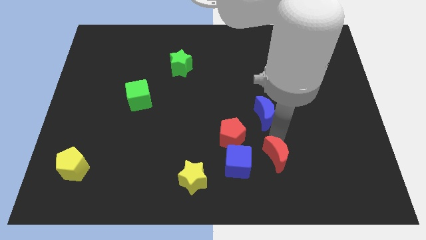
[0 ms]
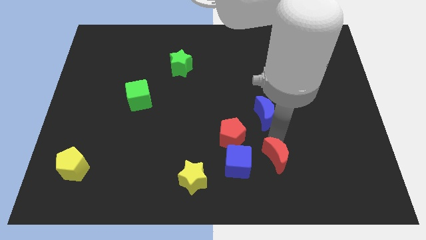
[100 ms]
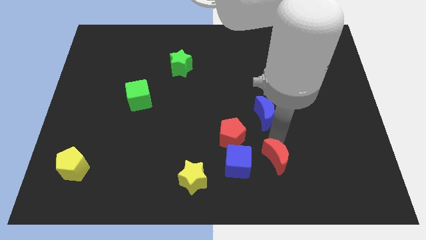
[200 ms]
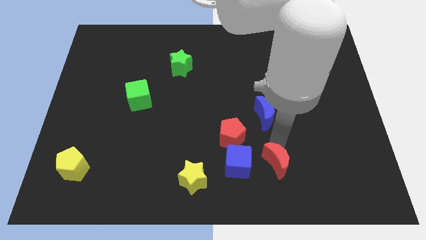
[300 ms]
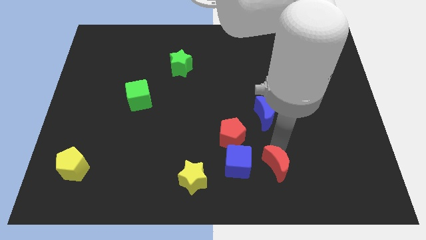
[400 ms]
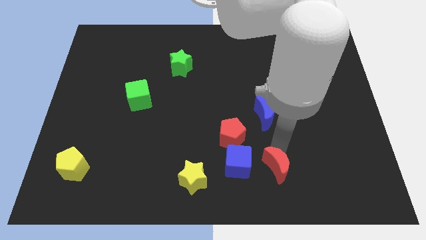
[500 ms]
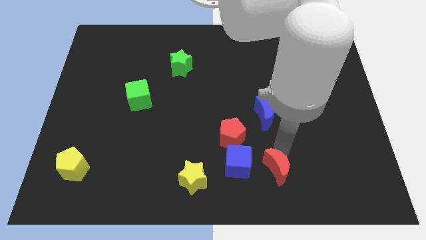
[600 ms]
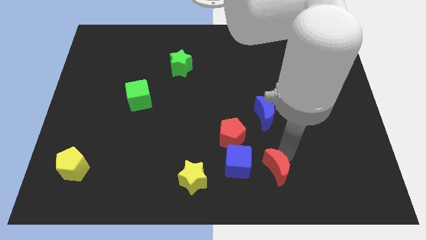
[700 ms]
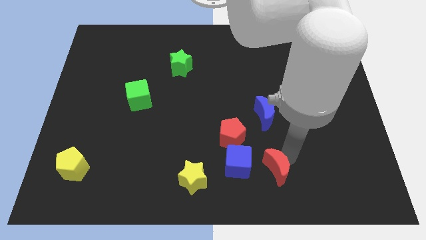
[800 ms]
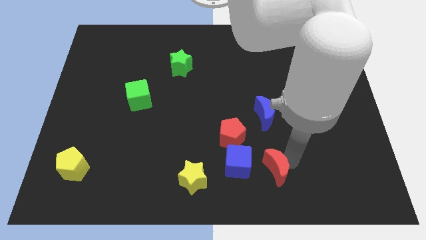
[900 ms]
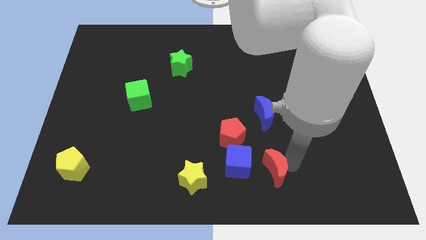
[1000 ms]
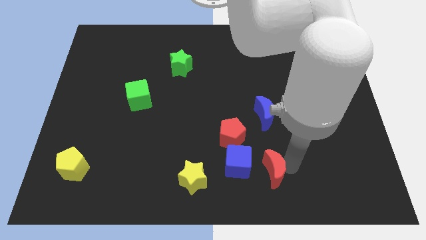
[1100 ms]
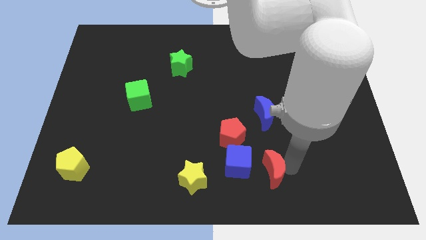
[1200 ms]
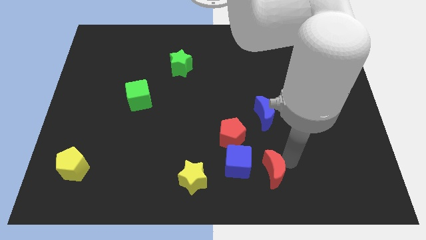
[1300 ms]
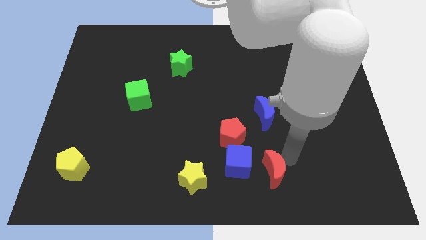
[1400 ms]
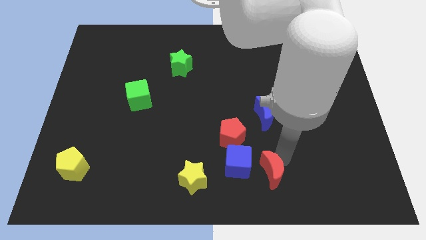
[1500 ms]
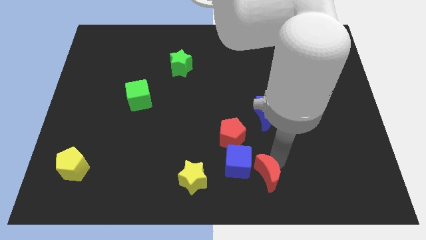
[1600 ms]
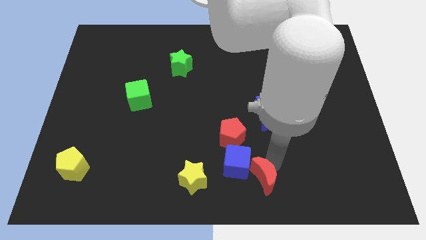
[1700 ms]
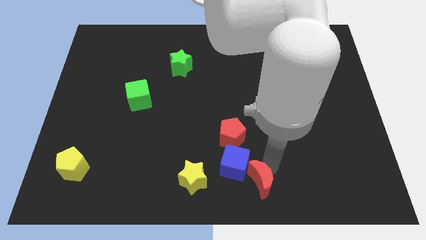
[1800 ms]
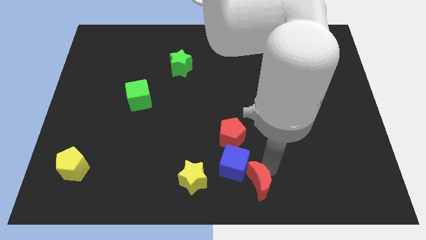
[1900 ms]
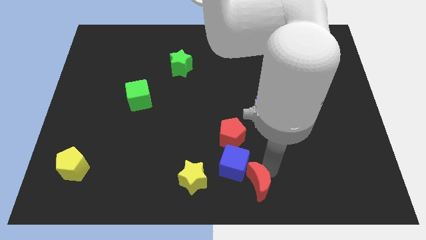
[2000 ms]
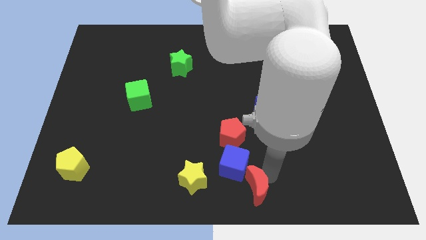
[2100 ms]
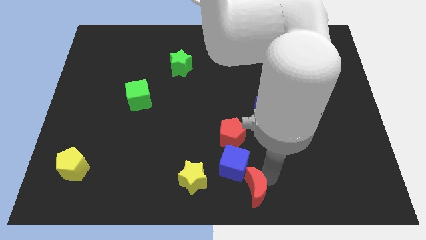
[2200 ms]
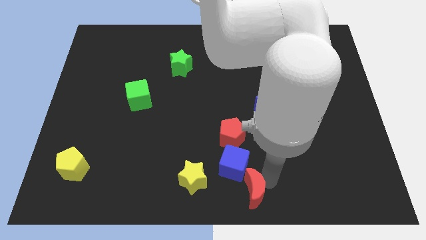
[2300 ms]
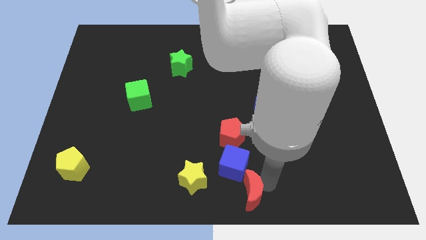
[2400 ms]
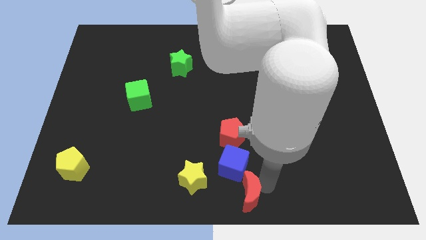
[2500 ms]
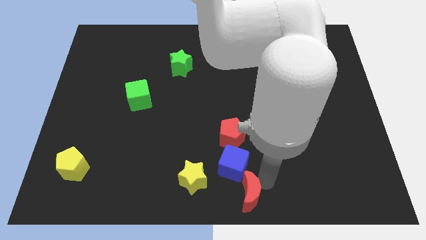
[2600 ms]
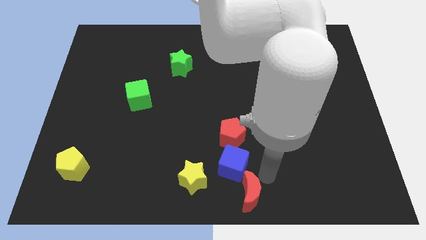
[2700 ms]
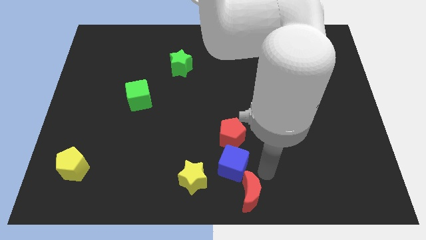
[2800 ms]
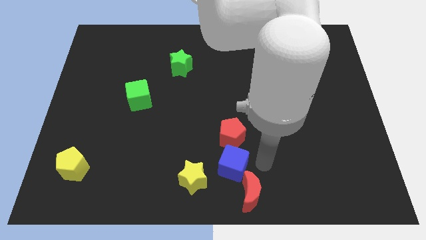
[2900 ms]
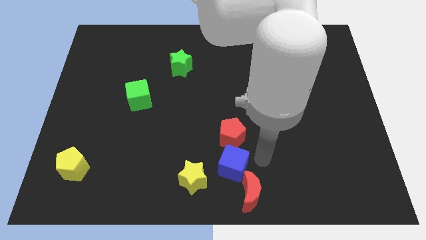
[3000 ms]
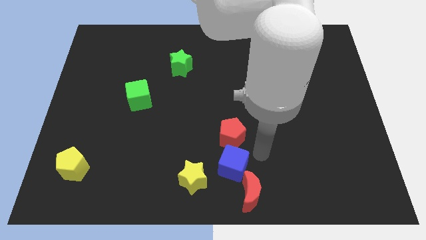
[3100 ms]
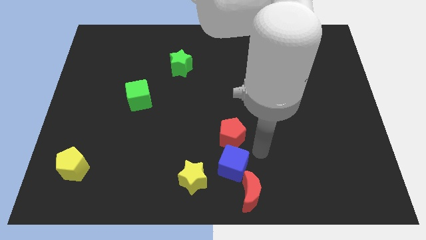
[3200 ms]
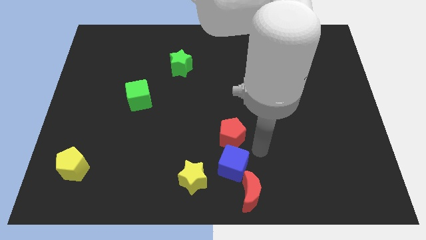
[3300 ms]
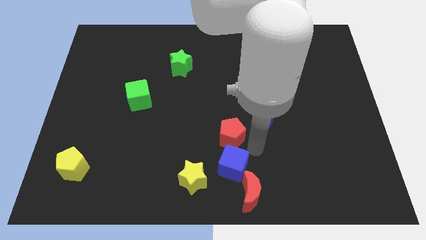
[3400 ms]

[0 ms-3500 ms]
put the red moon into the blue cube

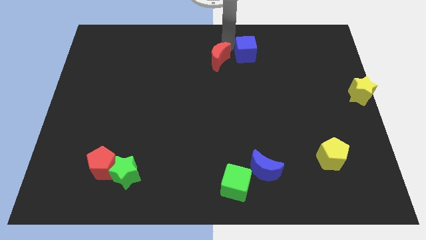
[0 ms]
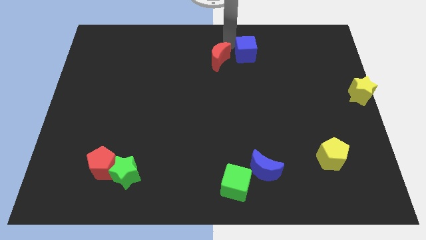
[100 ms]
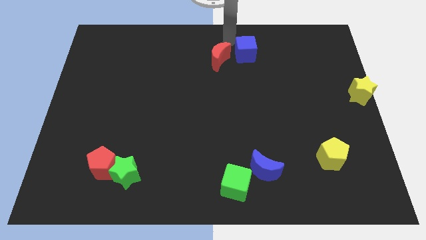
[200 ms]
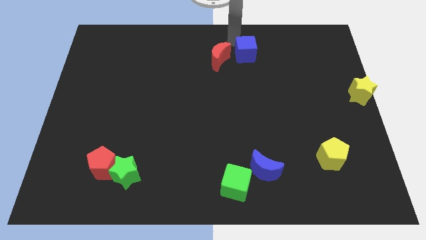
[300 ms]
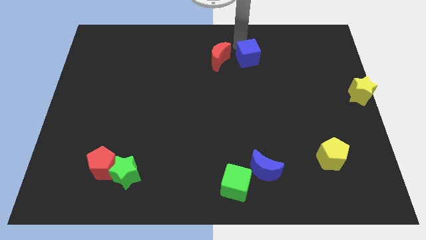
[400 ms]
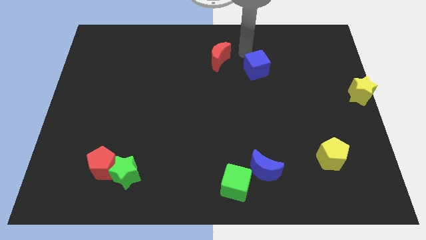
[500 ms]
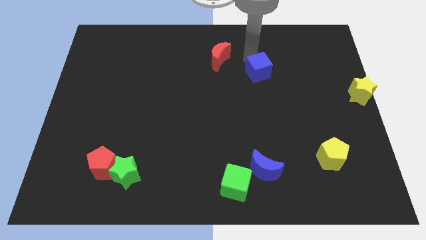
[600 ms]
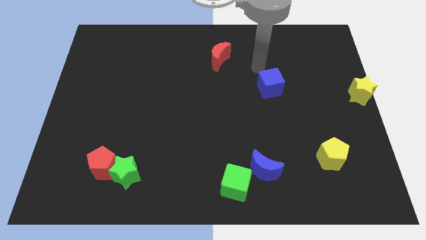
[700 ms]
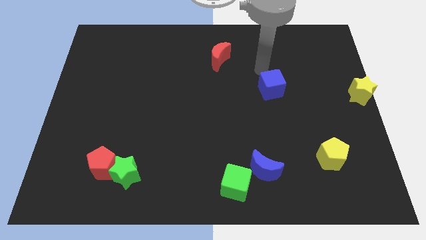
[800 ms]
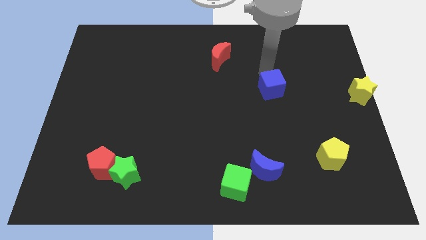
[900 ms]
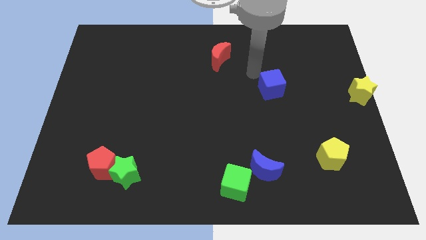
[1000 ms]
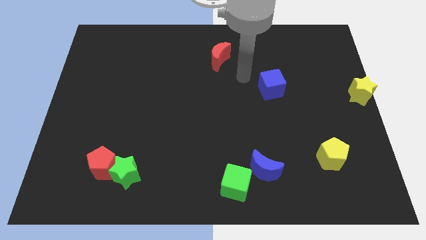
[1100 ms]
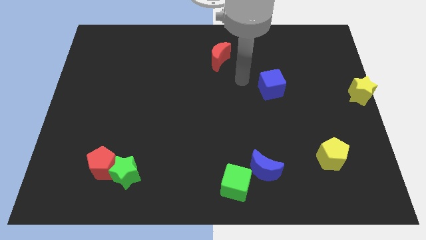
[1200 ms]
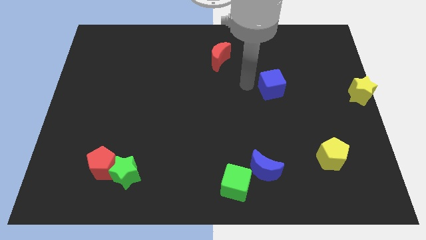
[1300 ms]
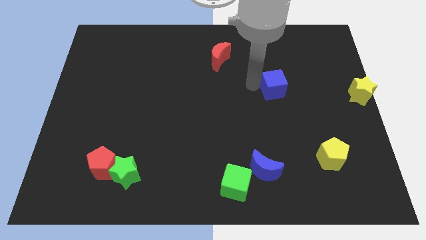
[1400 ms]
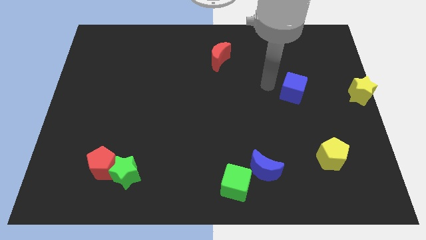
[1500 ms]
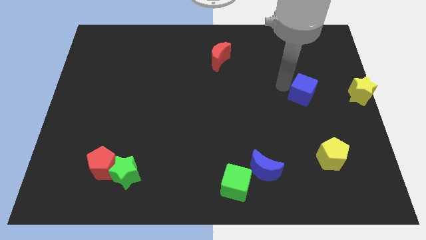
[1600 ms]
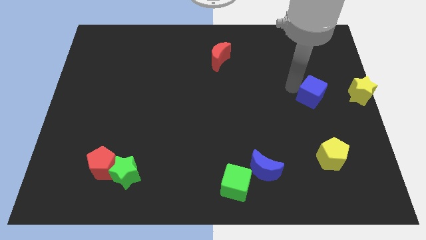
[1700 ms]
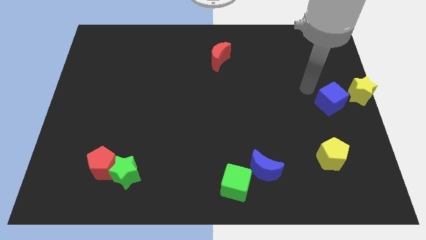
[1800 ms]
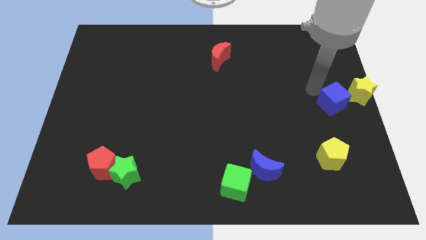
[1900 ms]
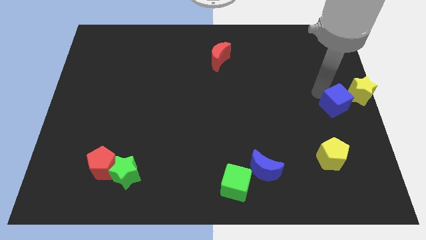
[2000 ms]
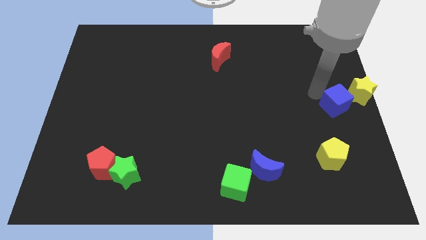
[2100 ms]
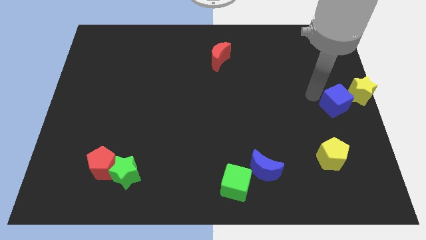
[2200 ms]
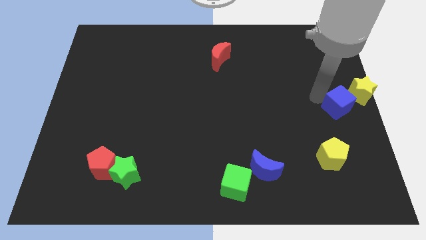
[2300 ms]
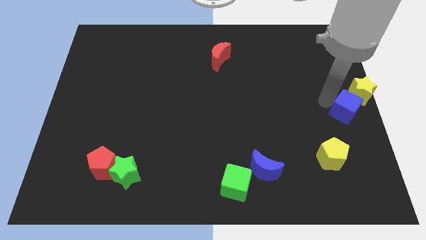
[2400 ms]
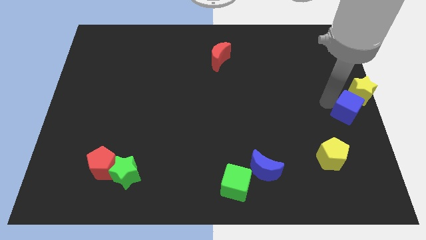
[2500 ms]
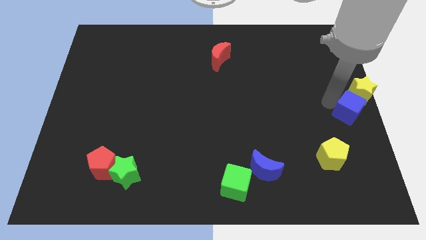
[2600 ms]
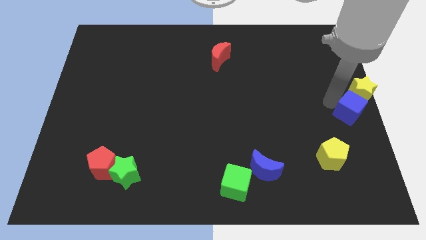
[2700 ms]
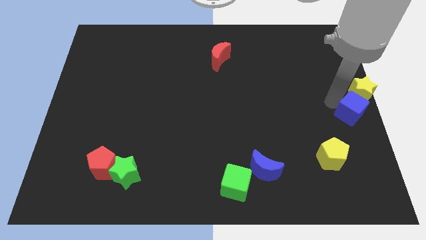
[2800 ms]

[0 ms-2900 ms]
move the blue cube towards the bottom of the yellow star

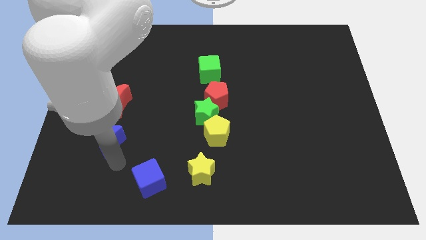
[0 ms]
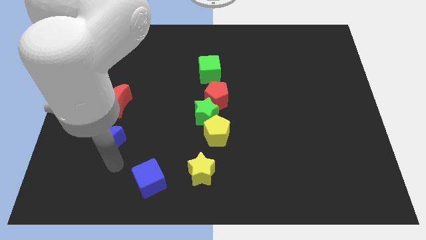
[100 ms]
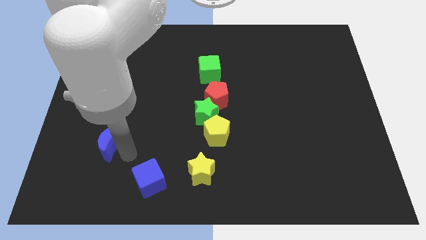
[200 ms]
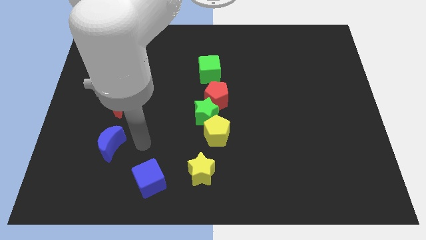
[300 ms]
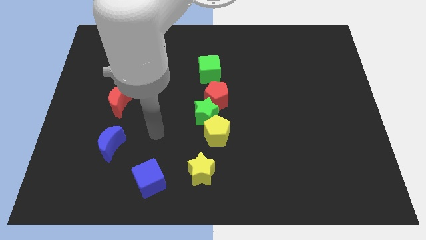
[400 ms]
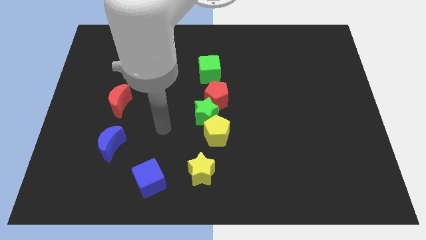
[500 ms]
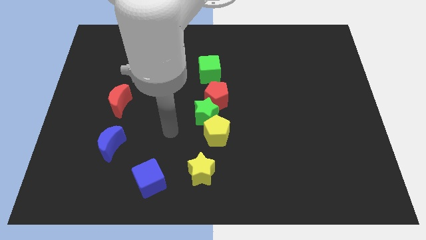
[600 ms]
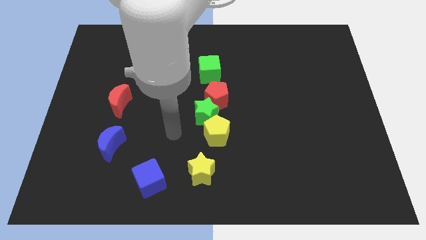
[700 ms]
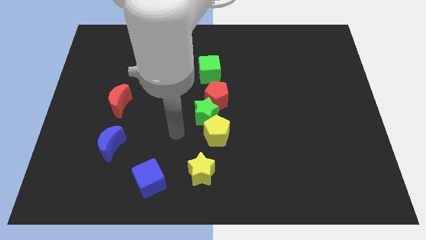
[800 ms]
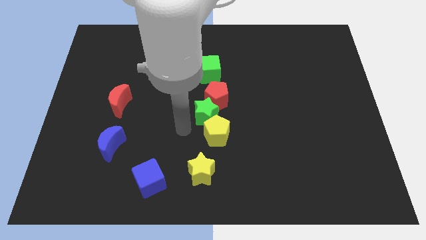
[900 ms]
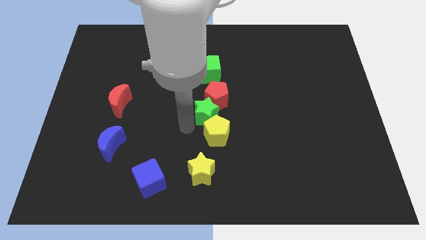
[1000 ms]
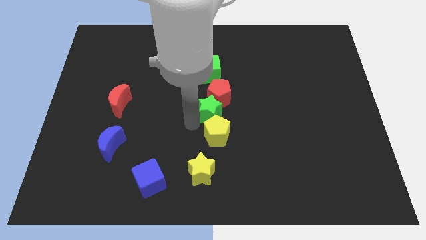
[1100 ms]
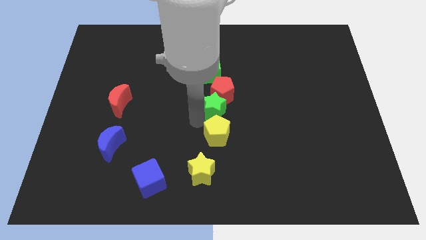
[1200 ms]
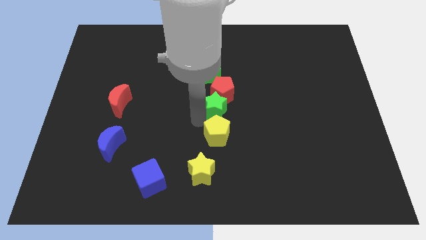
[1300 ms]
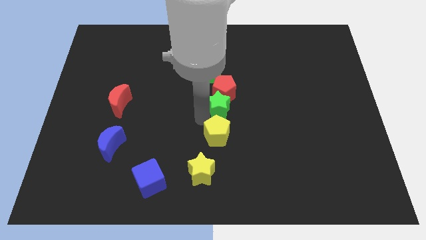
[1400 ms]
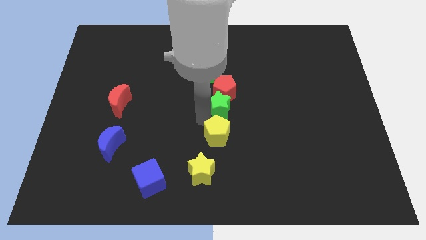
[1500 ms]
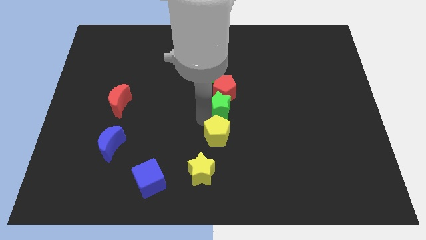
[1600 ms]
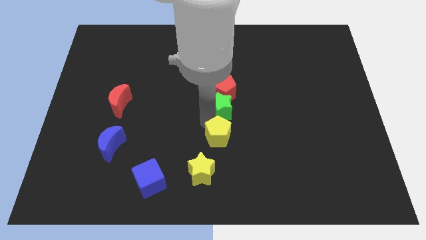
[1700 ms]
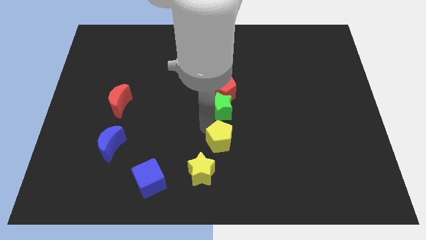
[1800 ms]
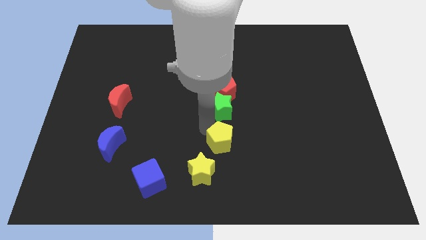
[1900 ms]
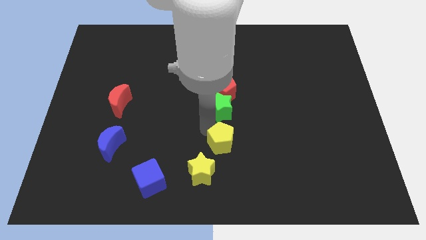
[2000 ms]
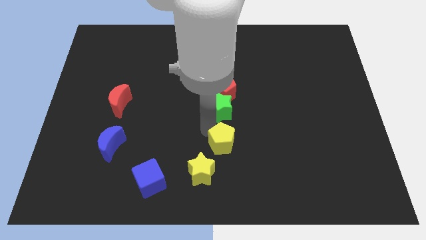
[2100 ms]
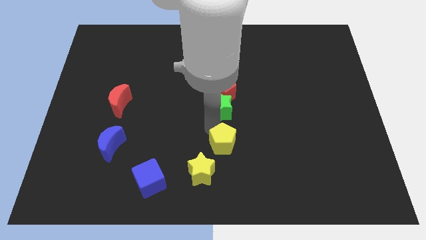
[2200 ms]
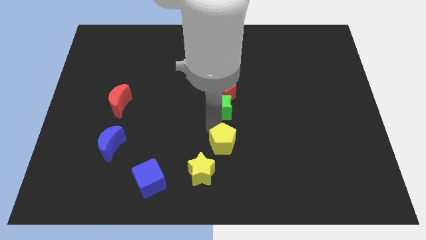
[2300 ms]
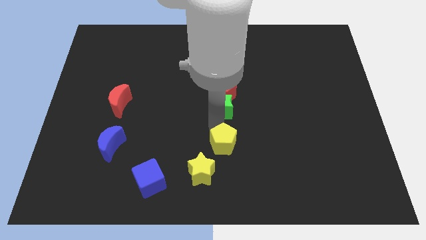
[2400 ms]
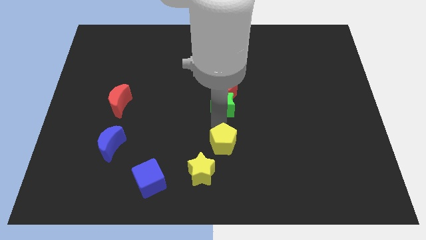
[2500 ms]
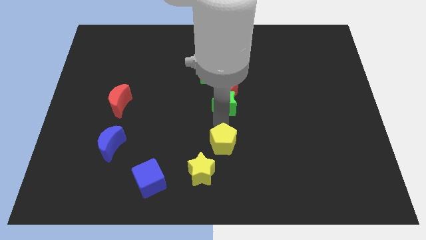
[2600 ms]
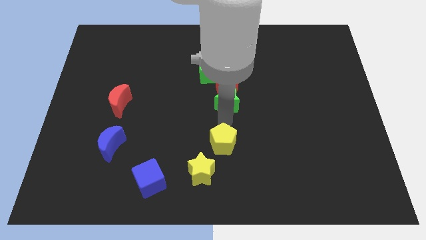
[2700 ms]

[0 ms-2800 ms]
push green star in to red pentagon
